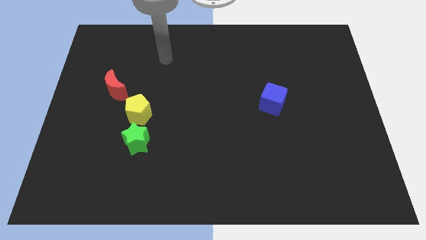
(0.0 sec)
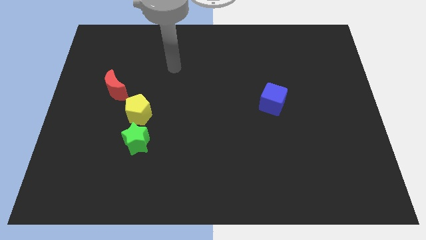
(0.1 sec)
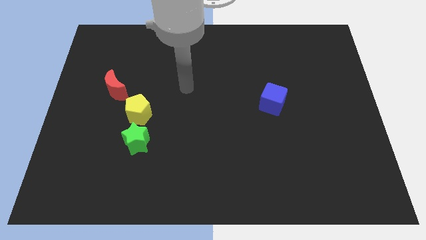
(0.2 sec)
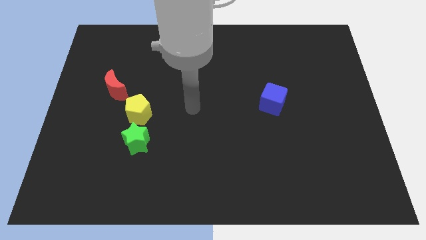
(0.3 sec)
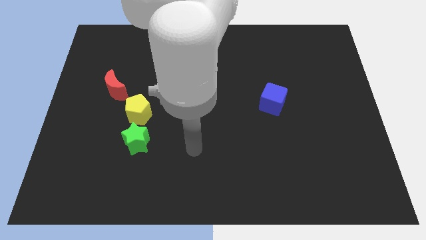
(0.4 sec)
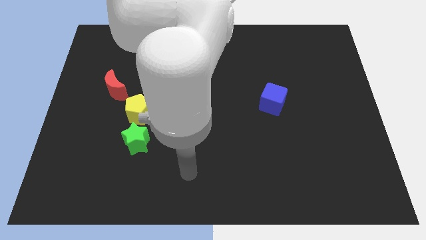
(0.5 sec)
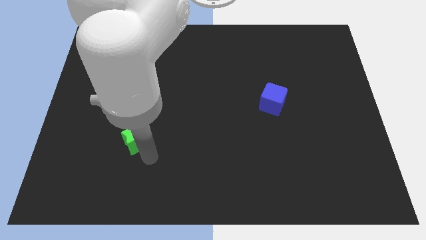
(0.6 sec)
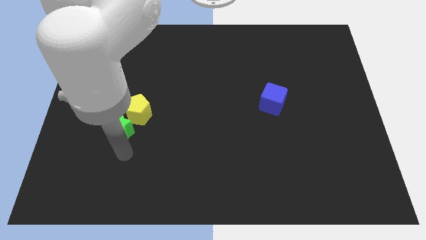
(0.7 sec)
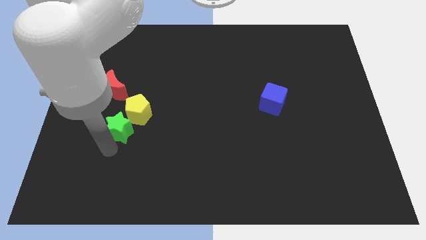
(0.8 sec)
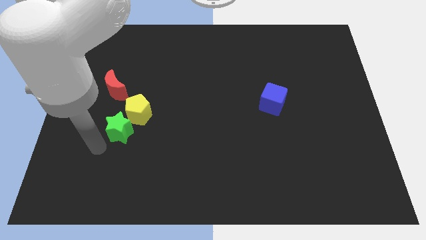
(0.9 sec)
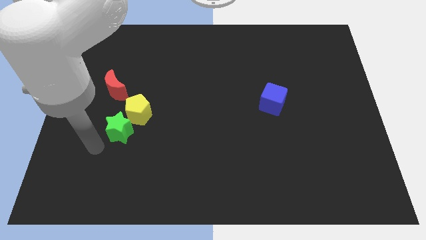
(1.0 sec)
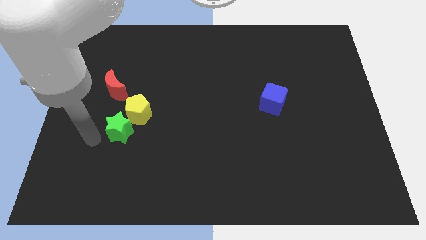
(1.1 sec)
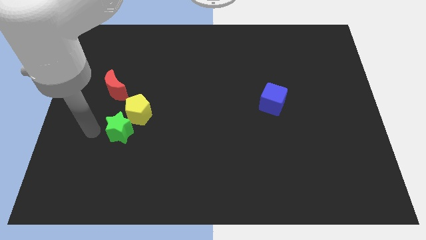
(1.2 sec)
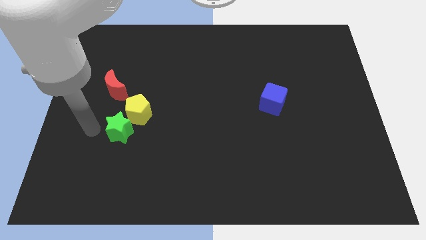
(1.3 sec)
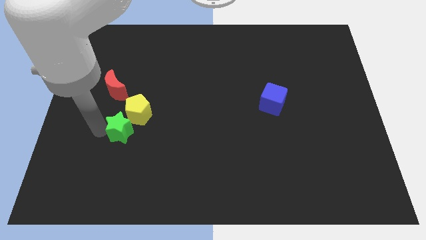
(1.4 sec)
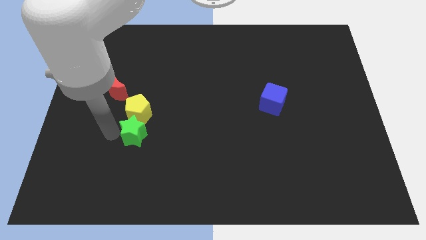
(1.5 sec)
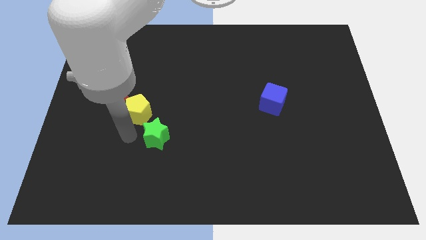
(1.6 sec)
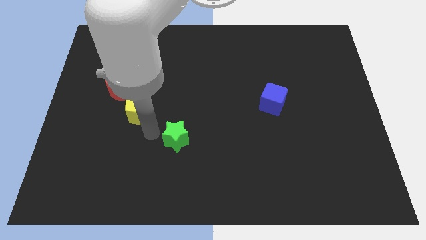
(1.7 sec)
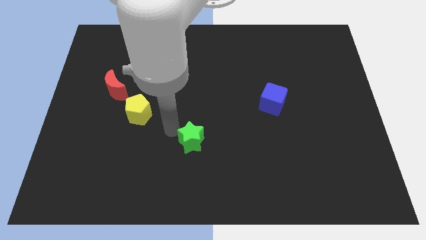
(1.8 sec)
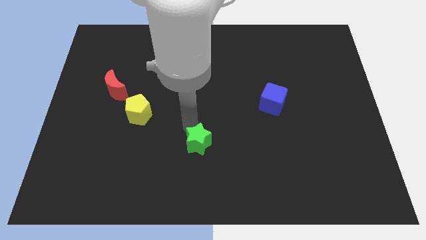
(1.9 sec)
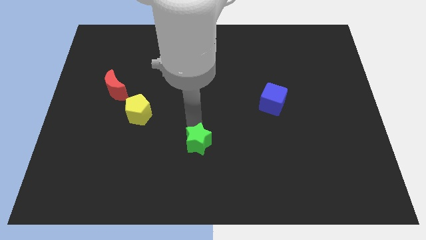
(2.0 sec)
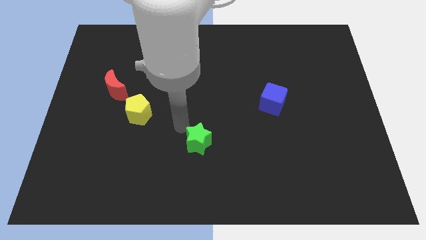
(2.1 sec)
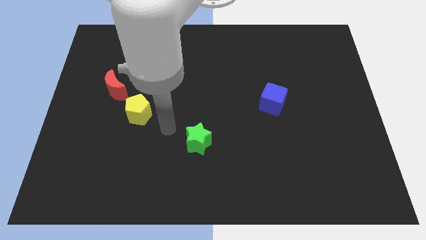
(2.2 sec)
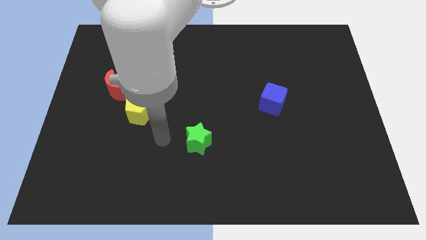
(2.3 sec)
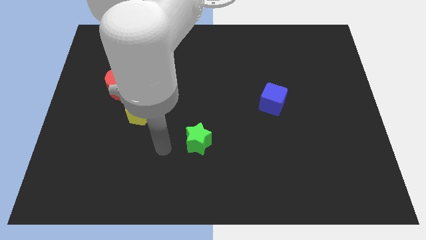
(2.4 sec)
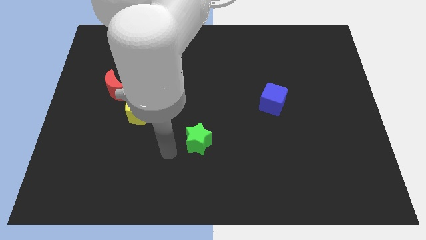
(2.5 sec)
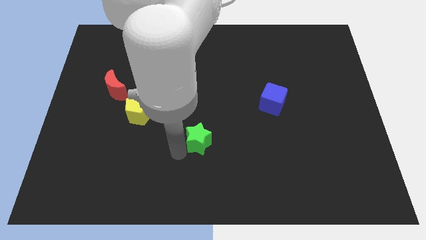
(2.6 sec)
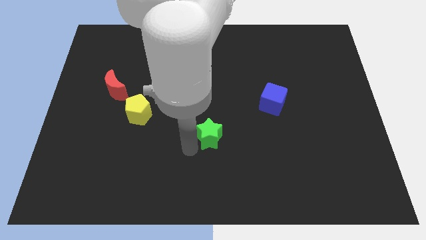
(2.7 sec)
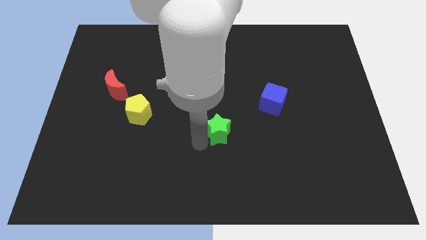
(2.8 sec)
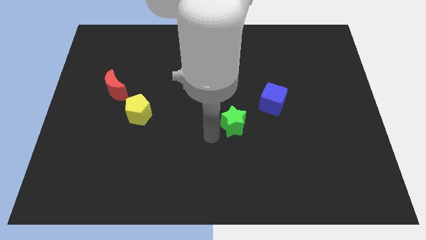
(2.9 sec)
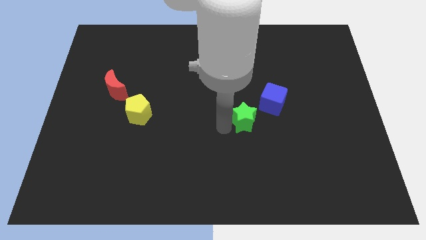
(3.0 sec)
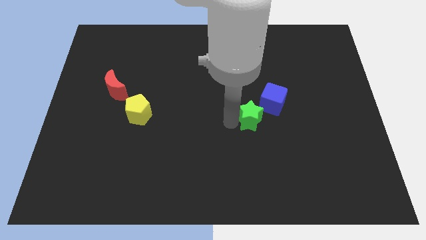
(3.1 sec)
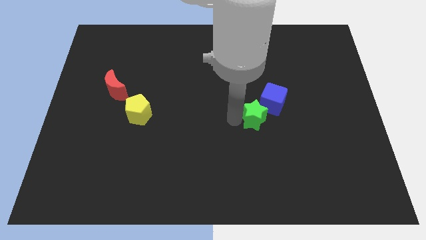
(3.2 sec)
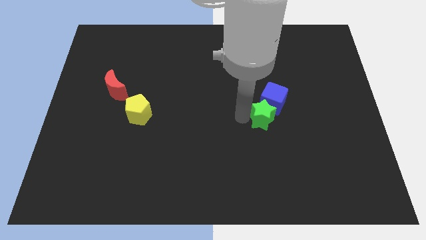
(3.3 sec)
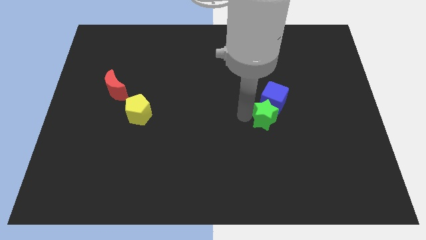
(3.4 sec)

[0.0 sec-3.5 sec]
put the green block next to the blue cube

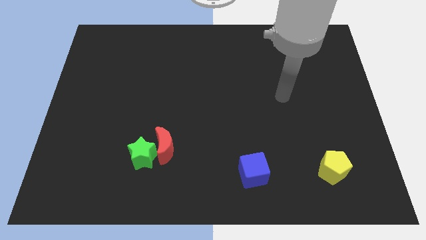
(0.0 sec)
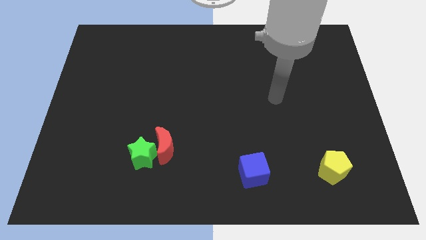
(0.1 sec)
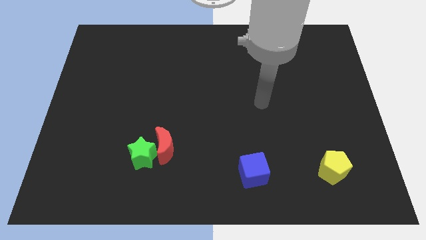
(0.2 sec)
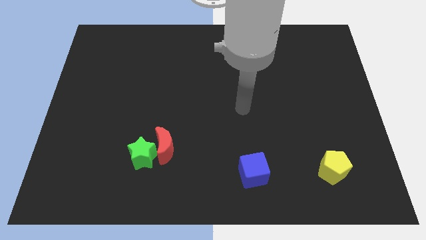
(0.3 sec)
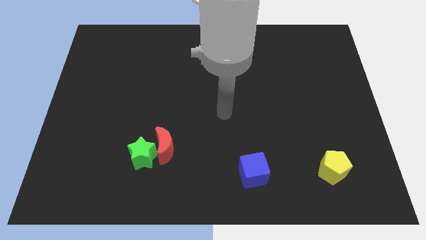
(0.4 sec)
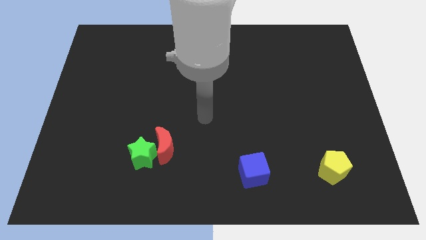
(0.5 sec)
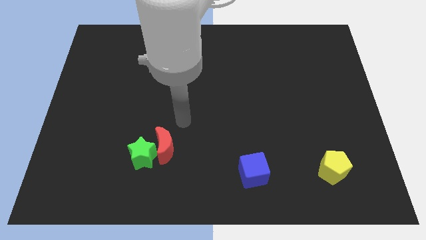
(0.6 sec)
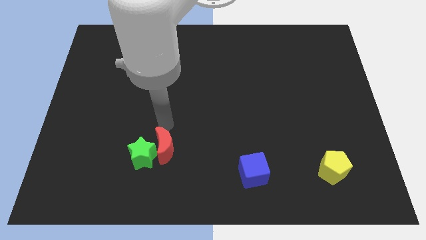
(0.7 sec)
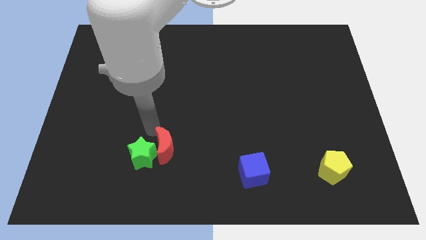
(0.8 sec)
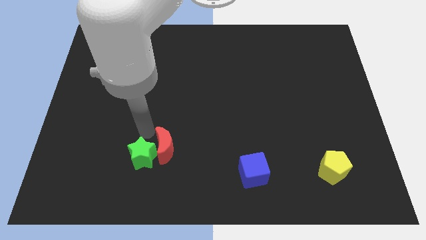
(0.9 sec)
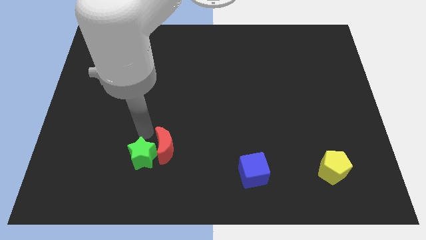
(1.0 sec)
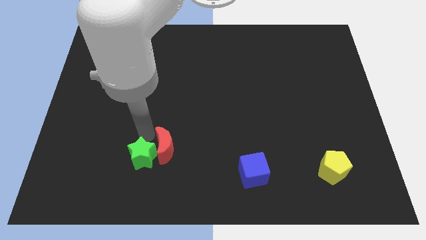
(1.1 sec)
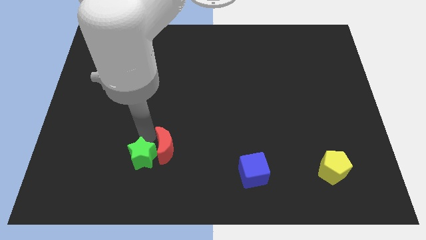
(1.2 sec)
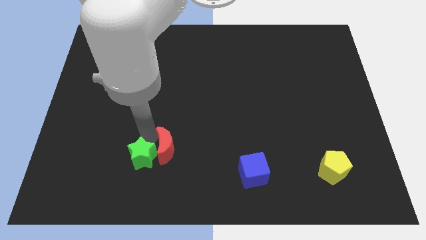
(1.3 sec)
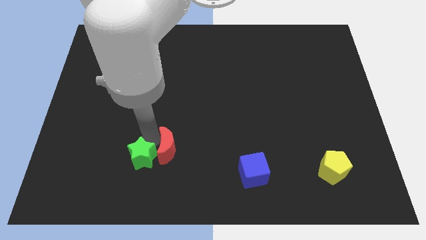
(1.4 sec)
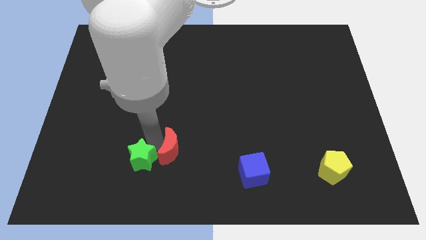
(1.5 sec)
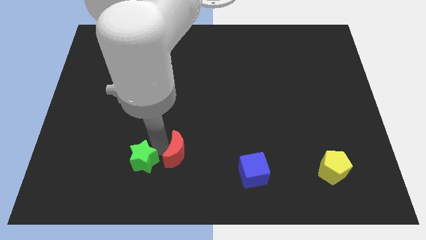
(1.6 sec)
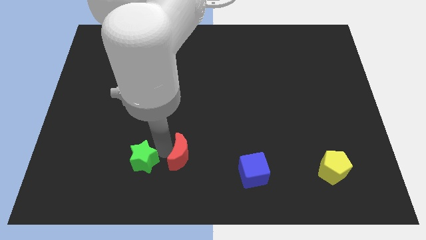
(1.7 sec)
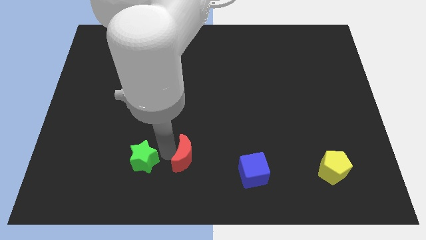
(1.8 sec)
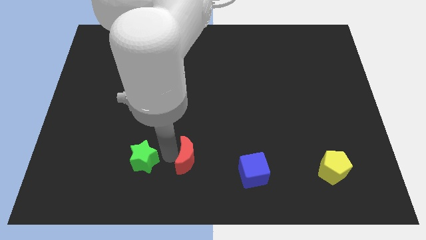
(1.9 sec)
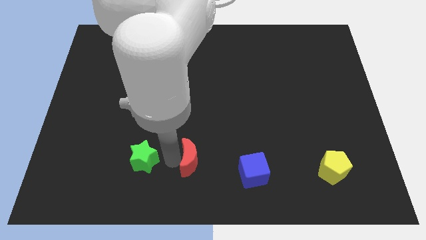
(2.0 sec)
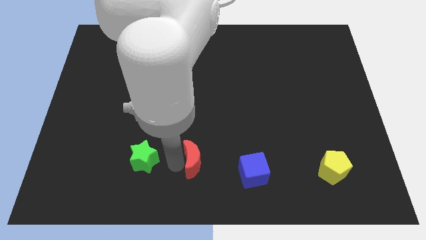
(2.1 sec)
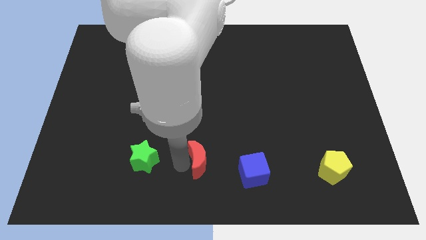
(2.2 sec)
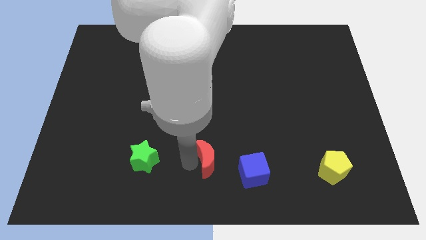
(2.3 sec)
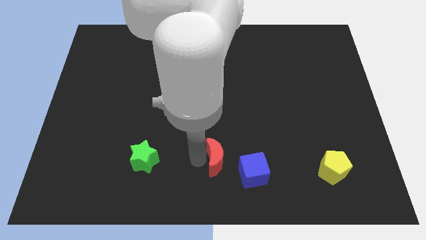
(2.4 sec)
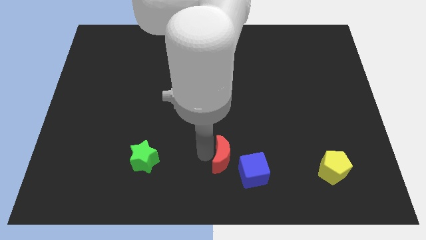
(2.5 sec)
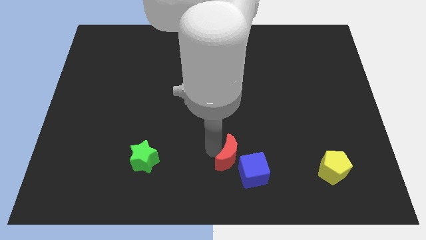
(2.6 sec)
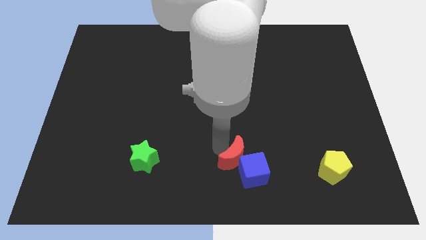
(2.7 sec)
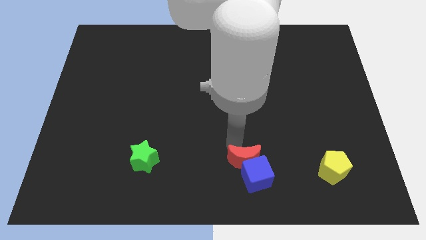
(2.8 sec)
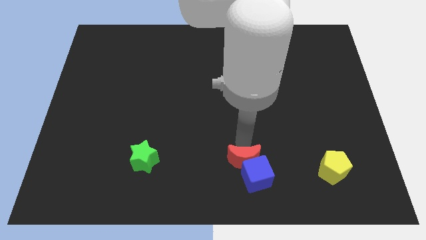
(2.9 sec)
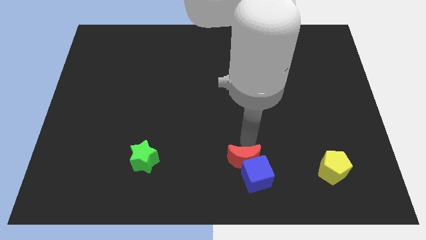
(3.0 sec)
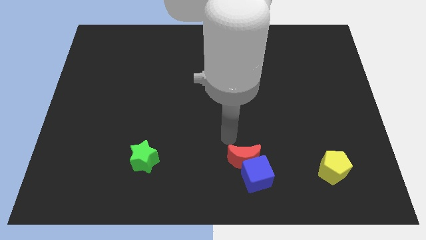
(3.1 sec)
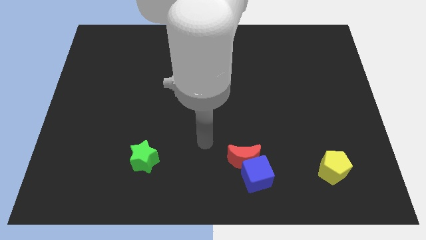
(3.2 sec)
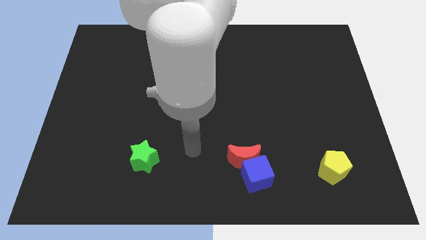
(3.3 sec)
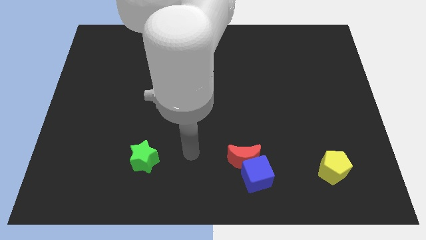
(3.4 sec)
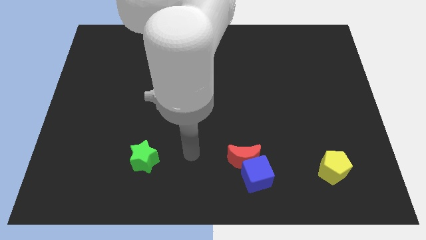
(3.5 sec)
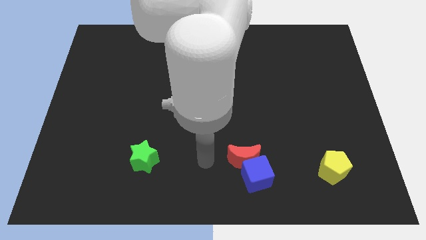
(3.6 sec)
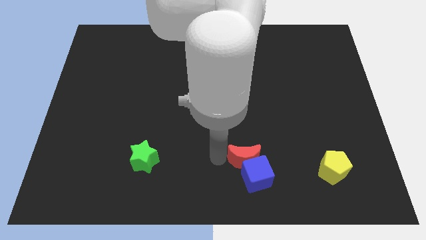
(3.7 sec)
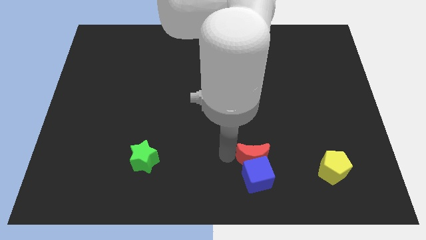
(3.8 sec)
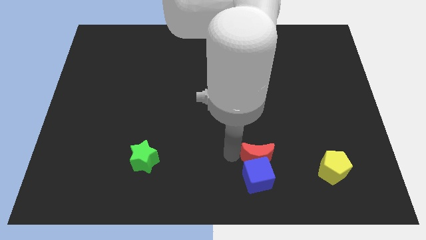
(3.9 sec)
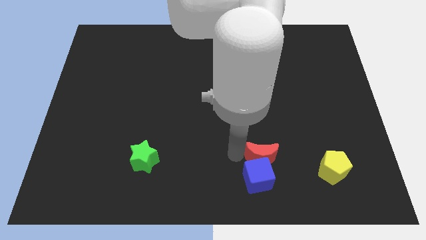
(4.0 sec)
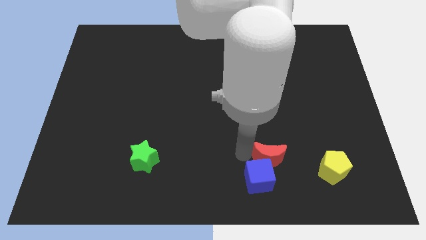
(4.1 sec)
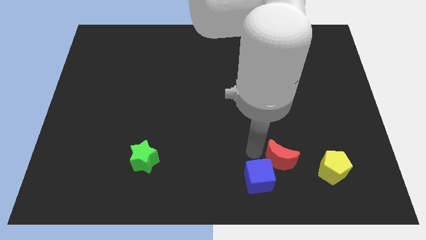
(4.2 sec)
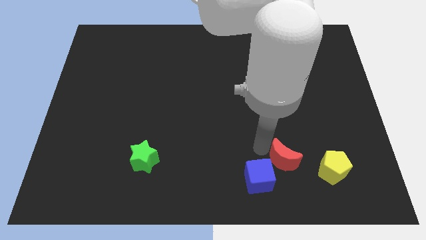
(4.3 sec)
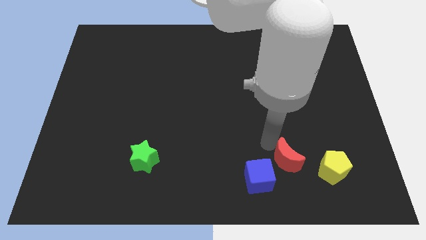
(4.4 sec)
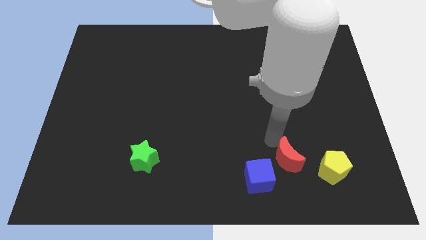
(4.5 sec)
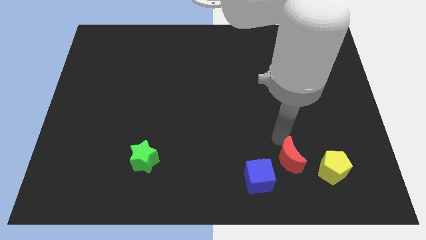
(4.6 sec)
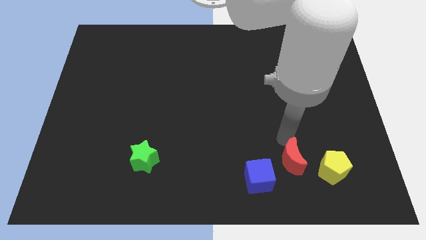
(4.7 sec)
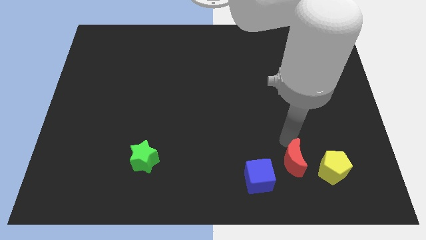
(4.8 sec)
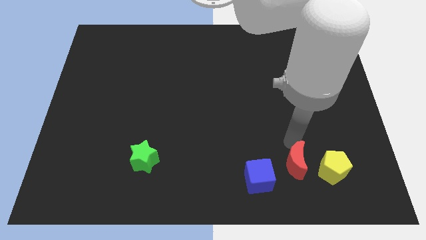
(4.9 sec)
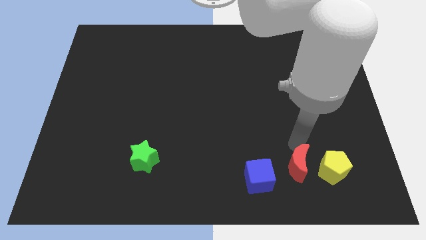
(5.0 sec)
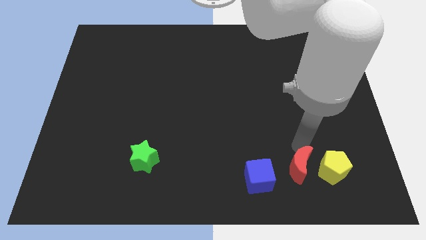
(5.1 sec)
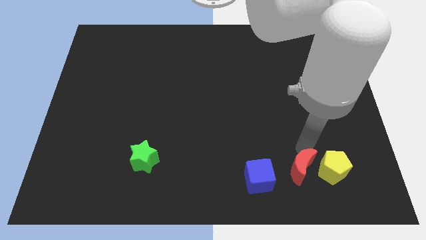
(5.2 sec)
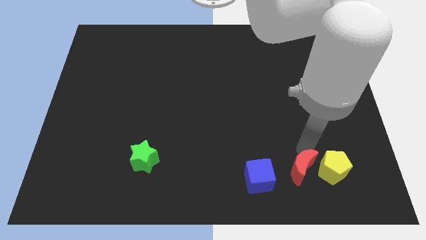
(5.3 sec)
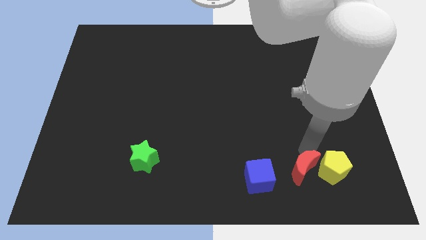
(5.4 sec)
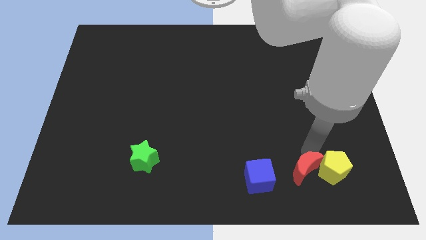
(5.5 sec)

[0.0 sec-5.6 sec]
slide the moon next to the pentagon
